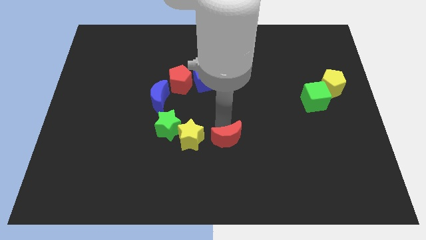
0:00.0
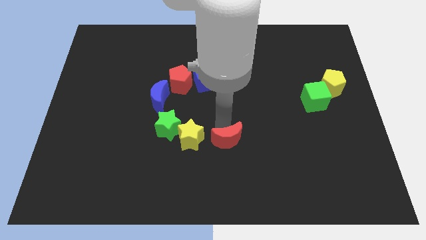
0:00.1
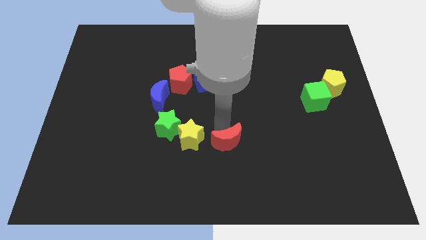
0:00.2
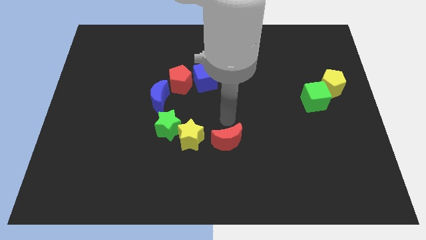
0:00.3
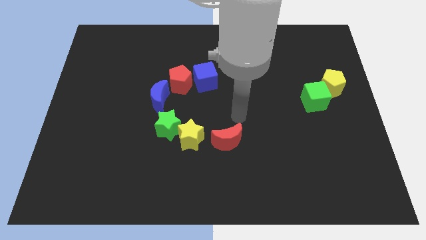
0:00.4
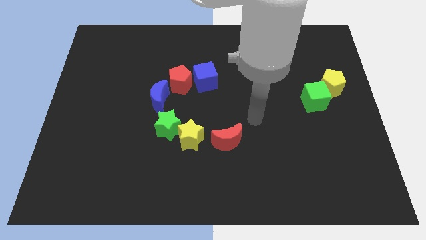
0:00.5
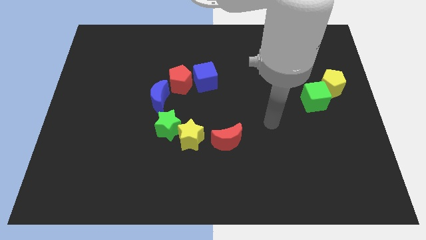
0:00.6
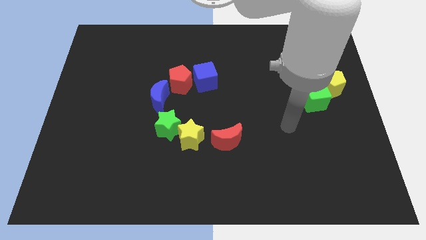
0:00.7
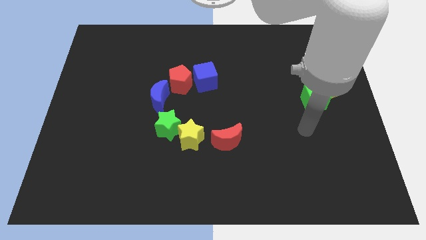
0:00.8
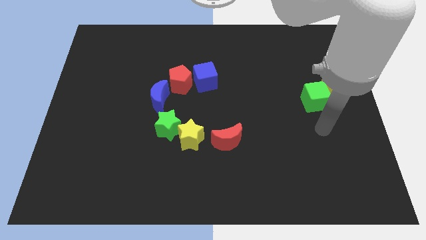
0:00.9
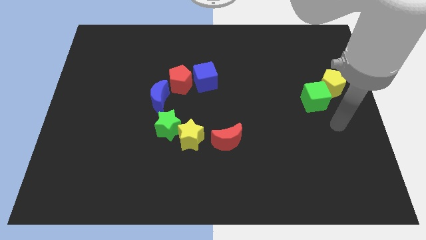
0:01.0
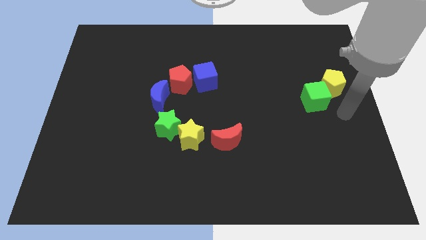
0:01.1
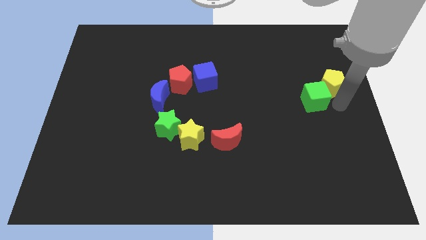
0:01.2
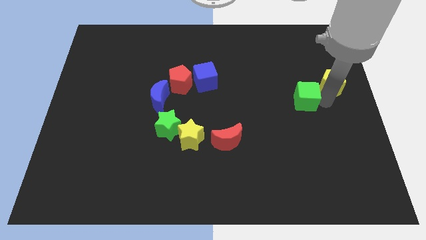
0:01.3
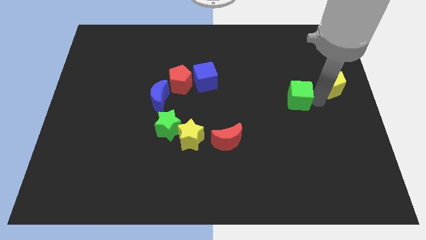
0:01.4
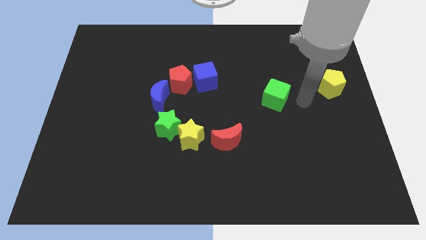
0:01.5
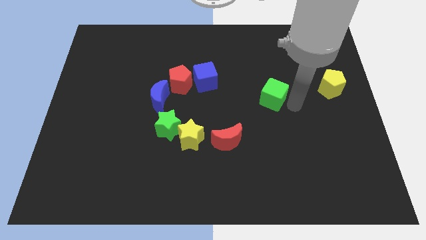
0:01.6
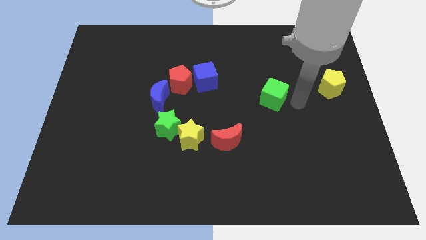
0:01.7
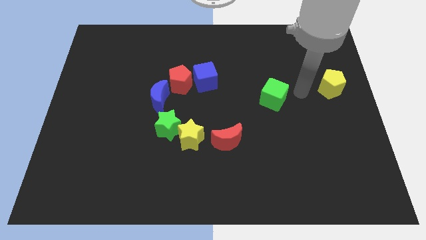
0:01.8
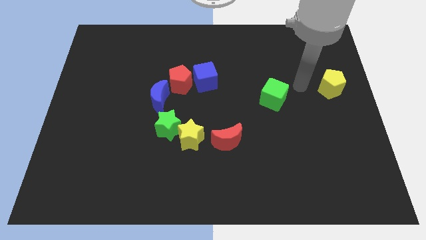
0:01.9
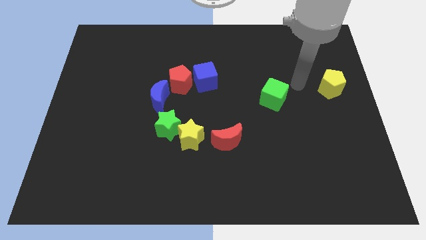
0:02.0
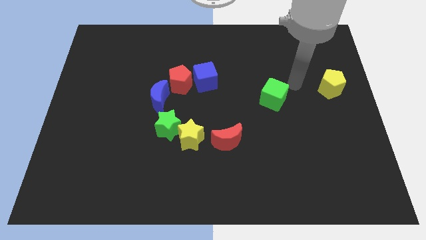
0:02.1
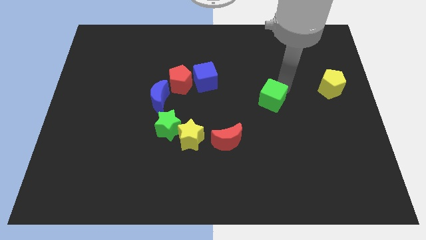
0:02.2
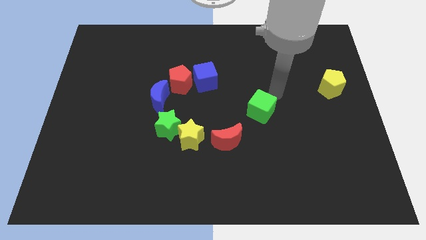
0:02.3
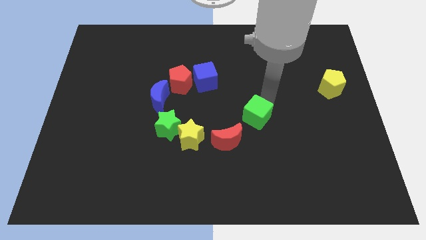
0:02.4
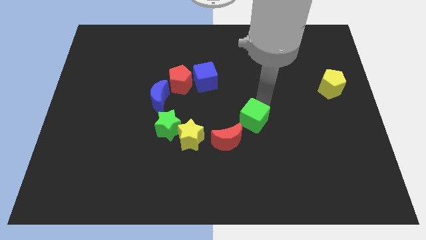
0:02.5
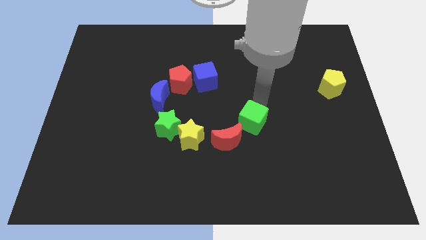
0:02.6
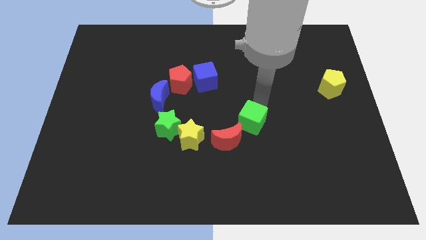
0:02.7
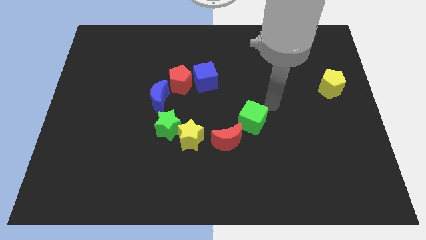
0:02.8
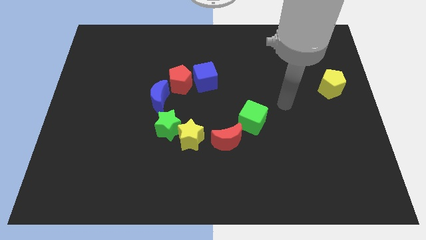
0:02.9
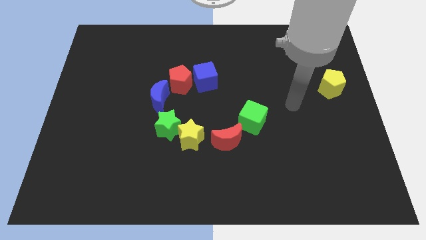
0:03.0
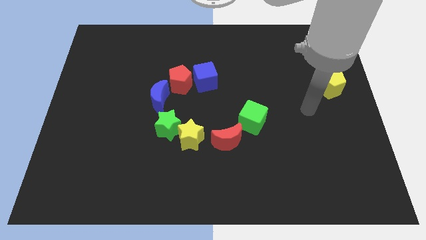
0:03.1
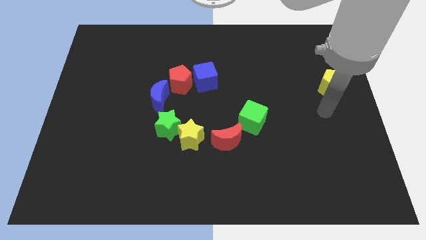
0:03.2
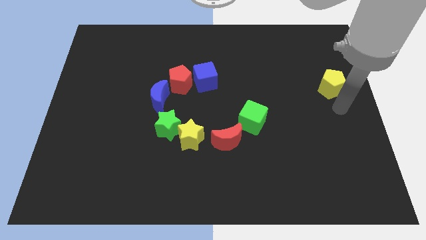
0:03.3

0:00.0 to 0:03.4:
separate the green cube and yellow pentagon

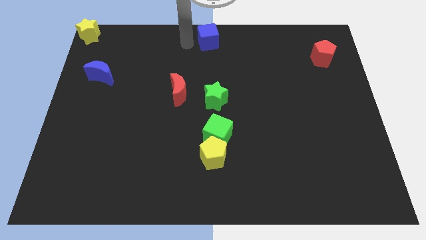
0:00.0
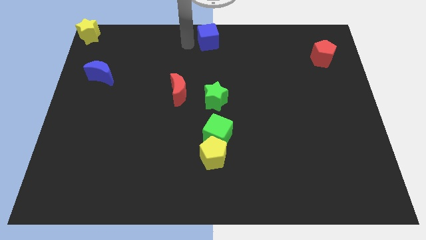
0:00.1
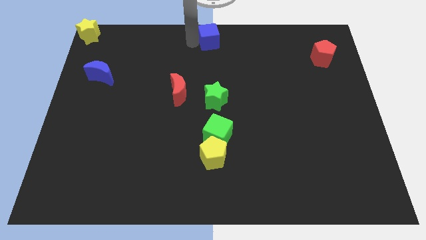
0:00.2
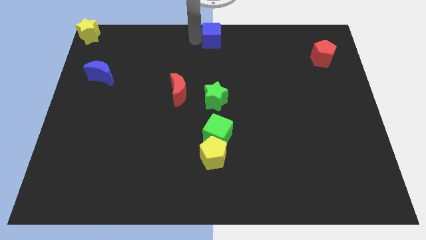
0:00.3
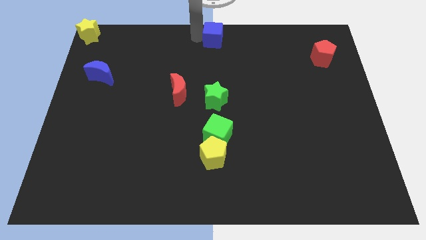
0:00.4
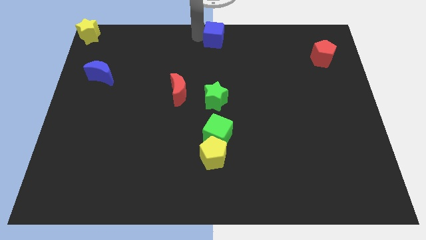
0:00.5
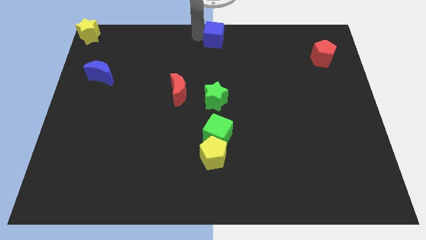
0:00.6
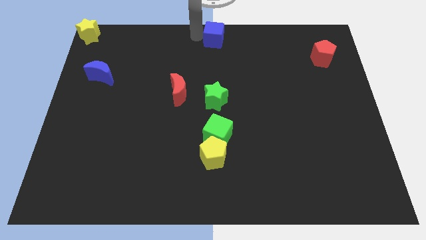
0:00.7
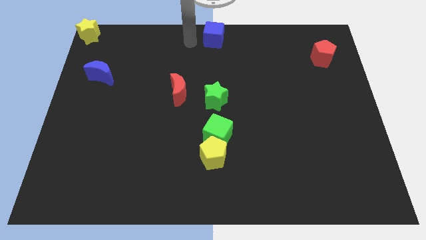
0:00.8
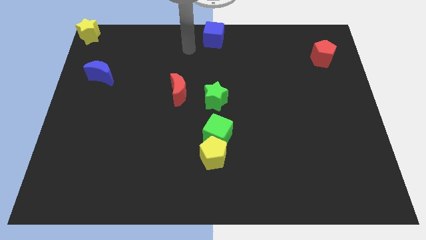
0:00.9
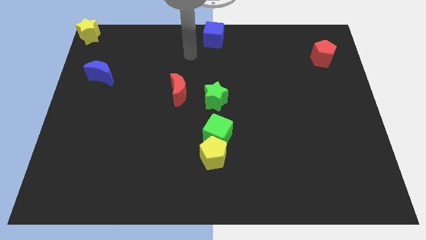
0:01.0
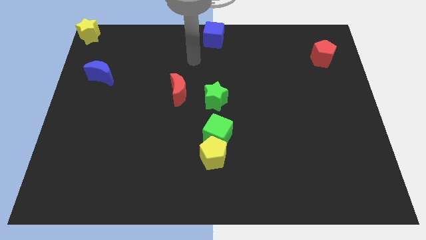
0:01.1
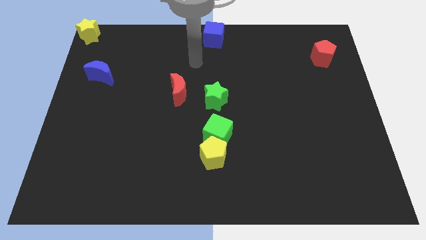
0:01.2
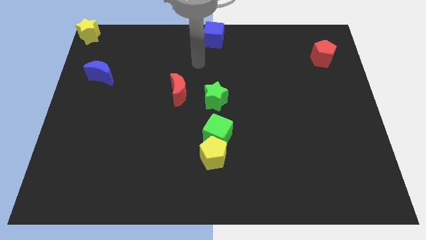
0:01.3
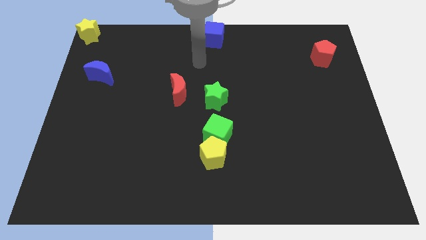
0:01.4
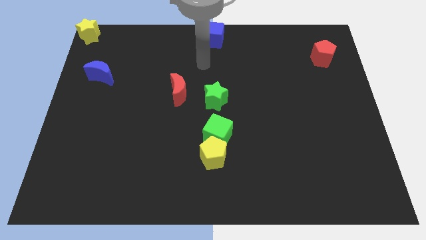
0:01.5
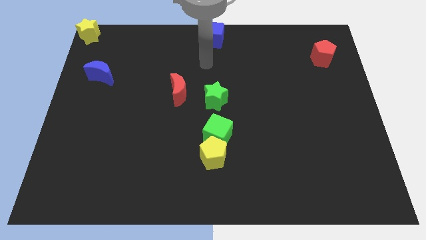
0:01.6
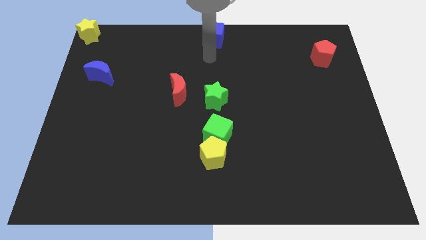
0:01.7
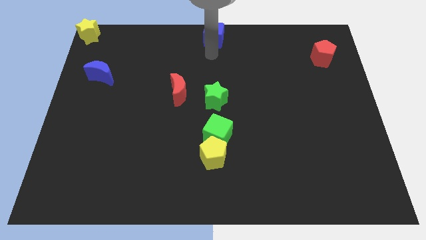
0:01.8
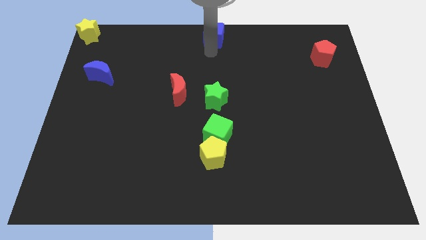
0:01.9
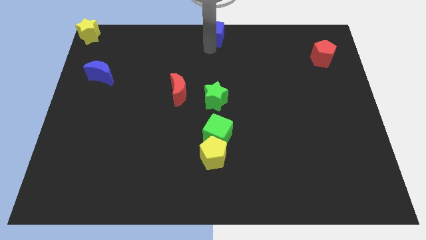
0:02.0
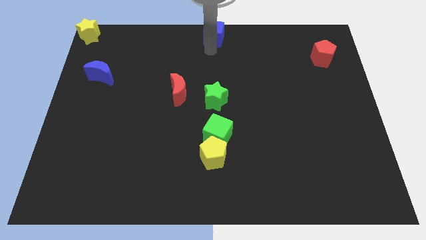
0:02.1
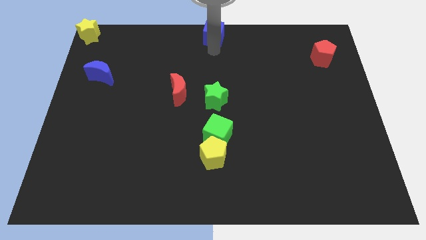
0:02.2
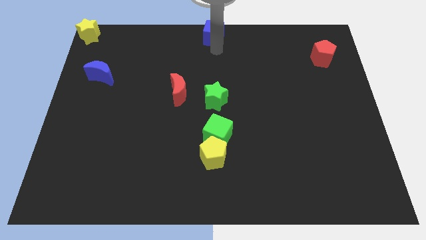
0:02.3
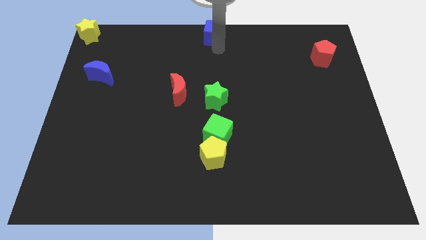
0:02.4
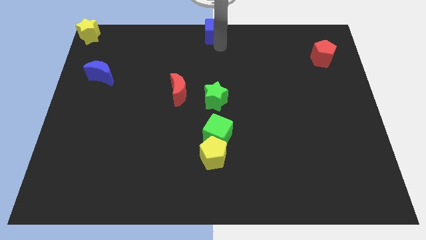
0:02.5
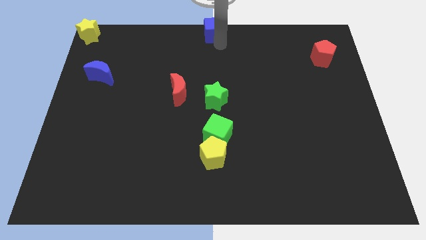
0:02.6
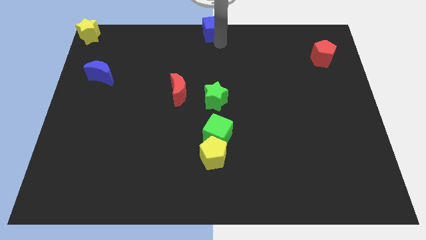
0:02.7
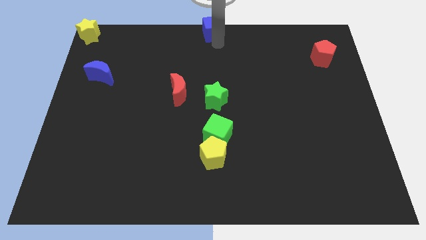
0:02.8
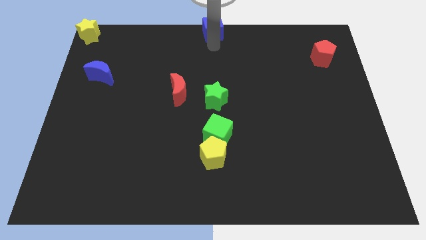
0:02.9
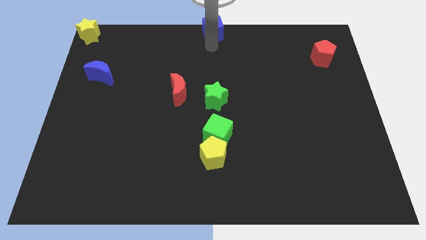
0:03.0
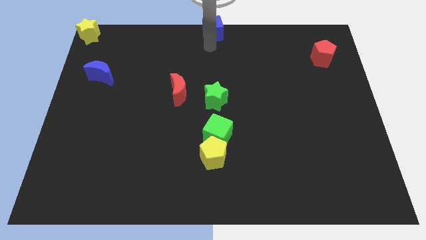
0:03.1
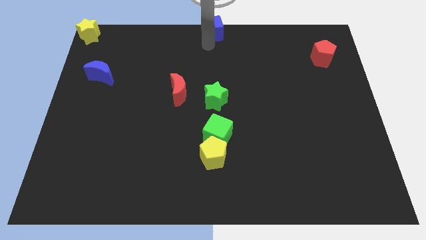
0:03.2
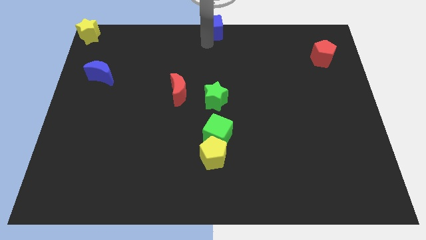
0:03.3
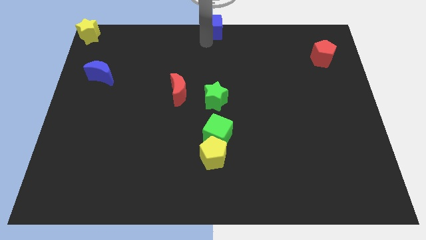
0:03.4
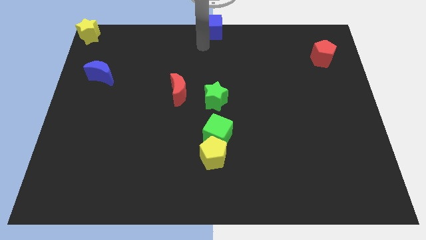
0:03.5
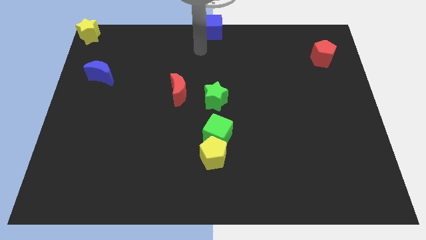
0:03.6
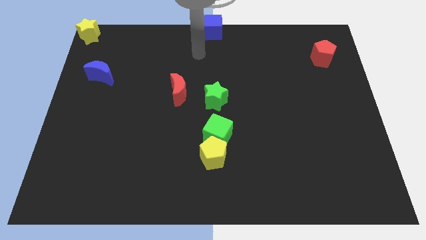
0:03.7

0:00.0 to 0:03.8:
move the blue cube at the top center of the table

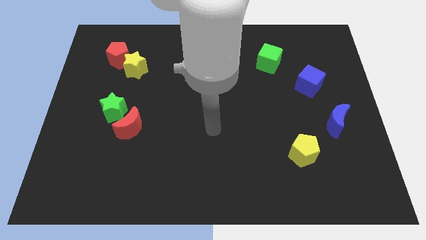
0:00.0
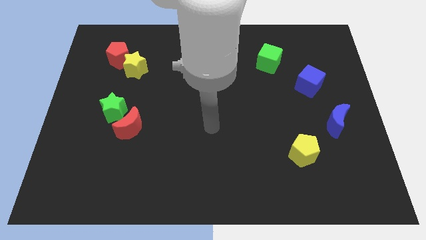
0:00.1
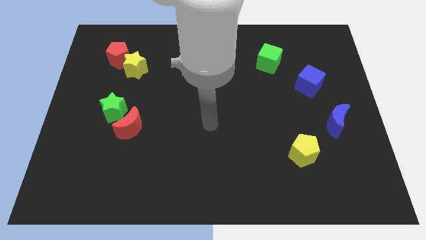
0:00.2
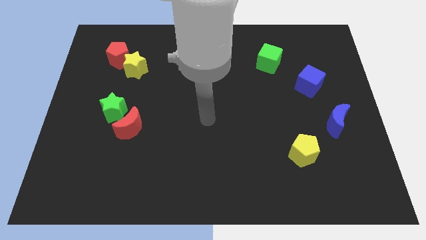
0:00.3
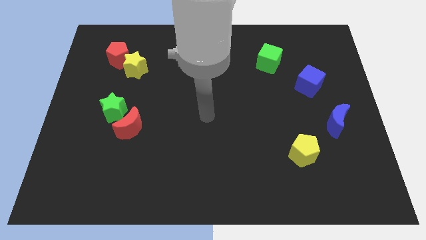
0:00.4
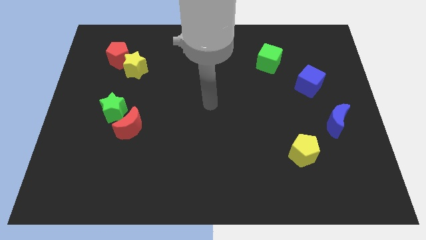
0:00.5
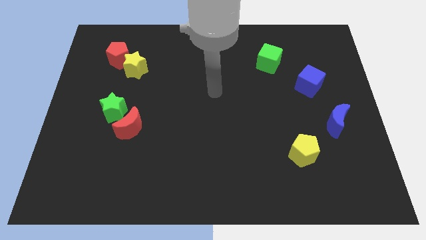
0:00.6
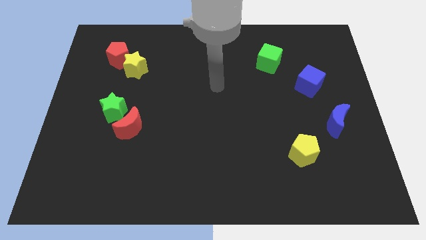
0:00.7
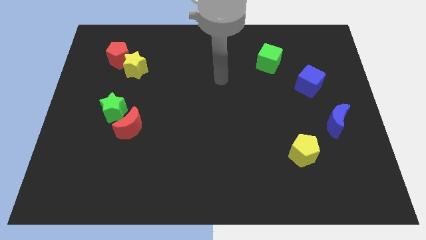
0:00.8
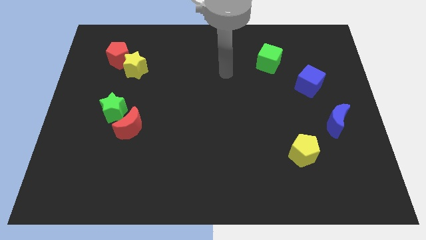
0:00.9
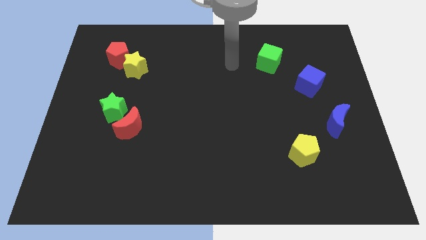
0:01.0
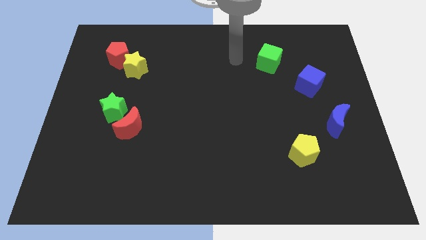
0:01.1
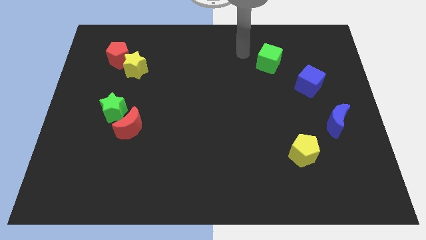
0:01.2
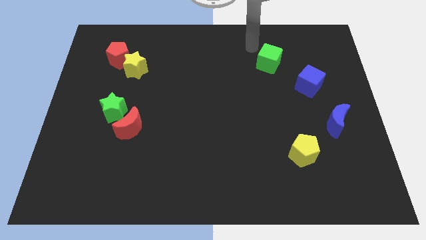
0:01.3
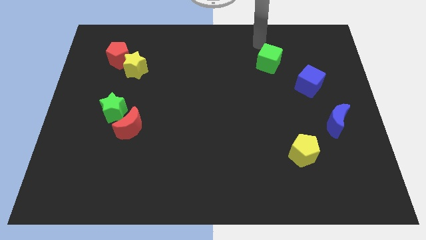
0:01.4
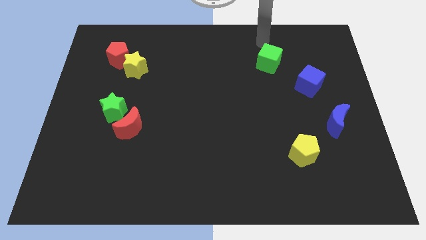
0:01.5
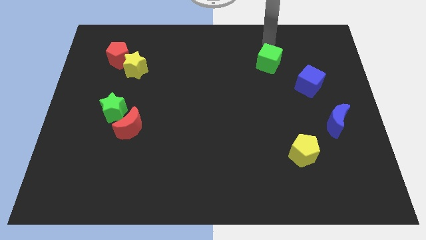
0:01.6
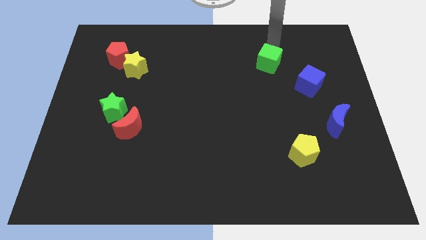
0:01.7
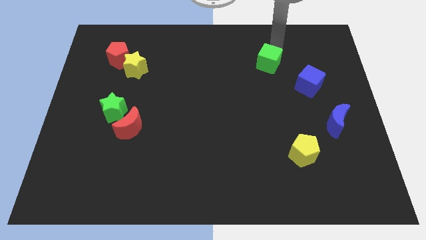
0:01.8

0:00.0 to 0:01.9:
move your arm towards top of green cube
